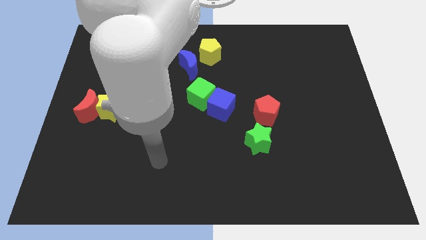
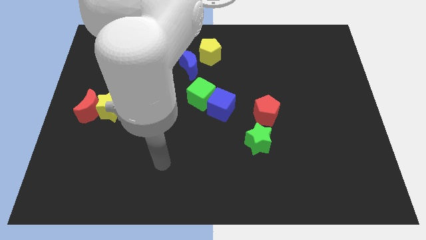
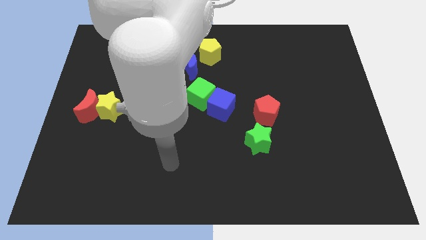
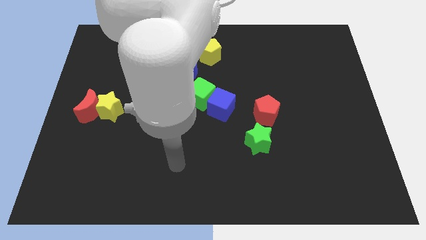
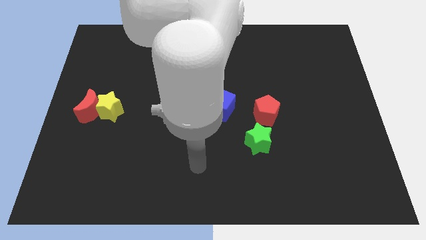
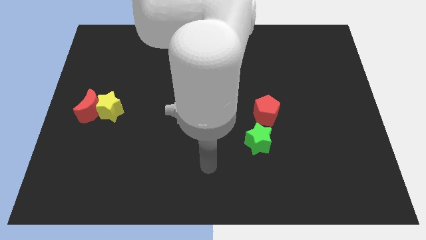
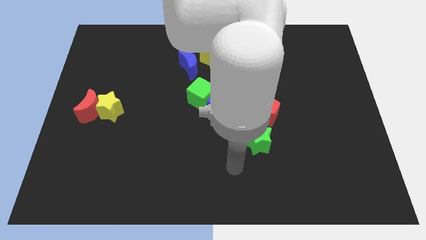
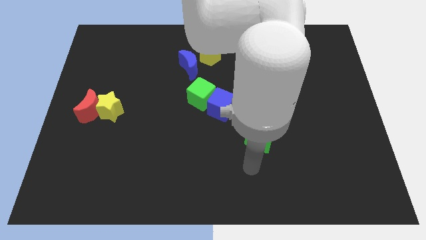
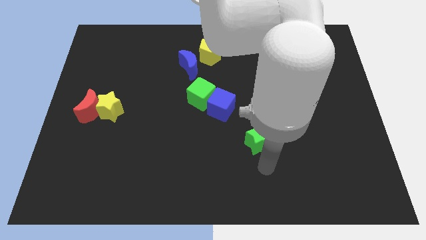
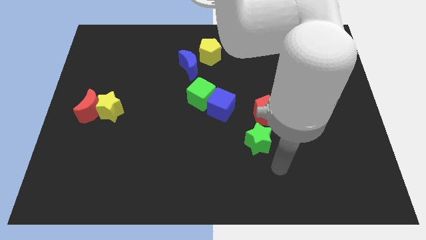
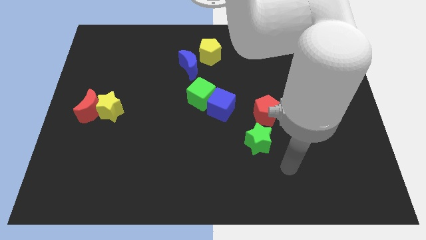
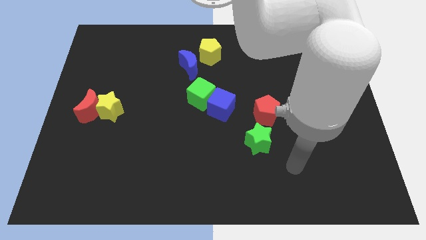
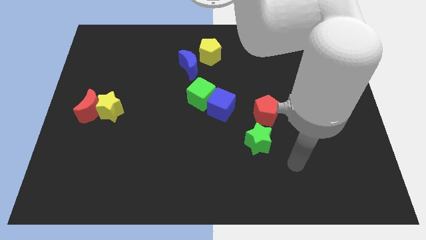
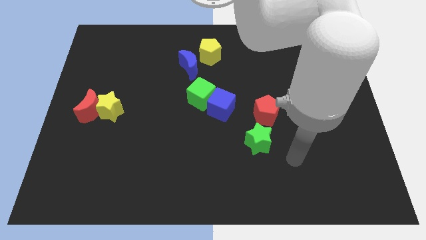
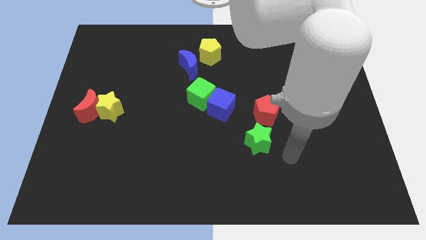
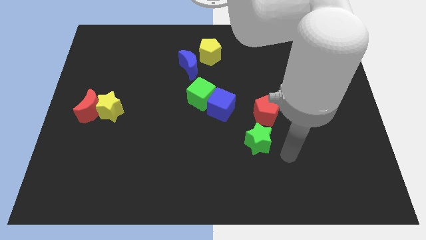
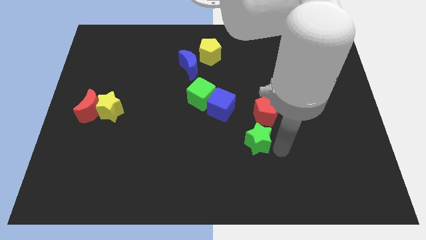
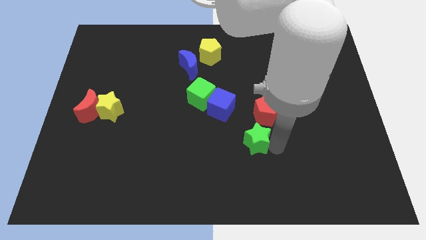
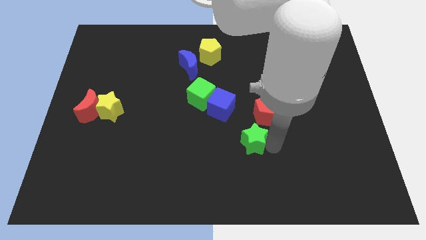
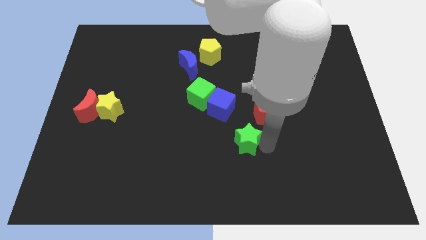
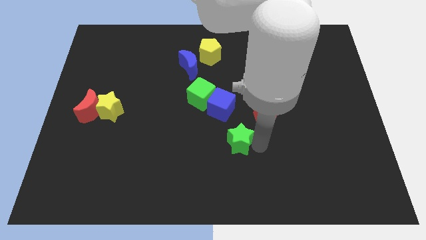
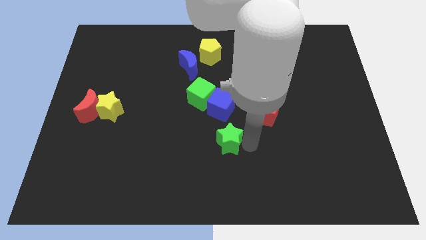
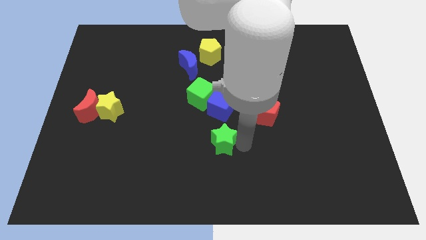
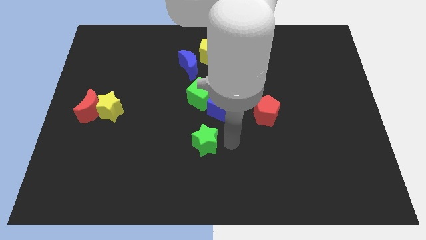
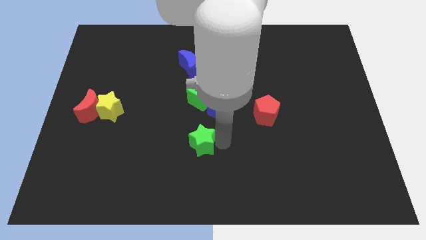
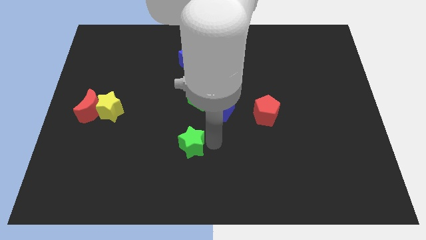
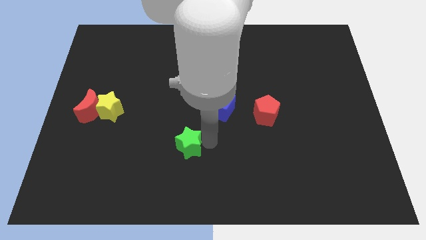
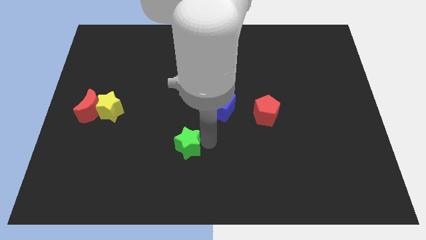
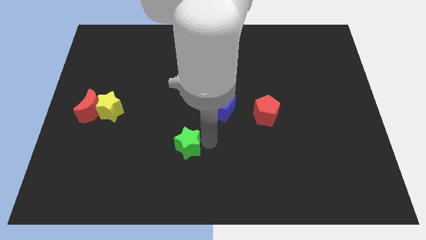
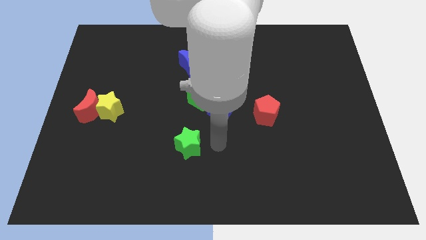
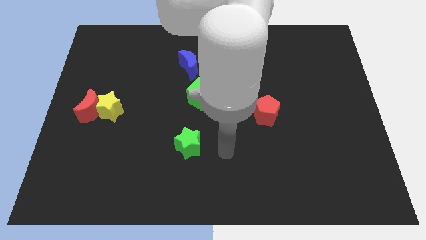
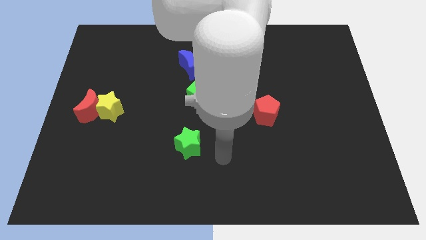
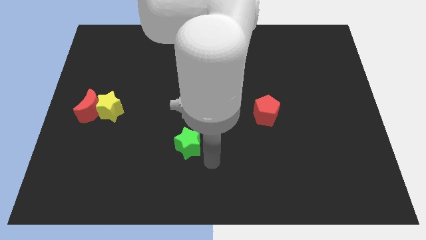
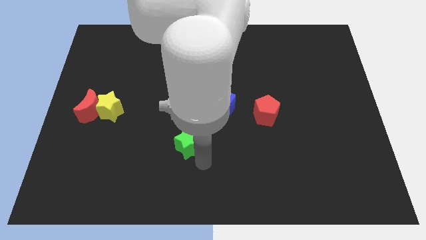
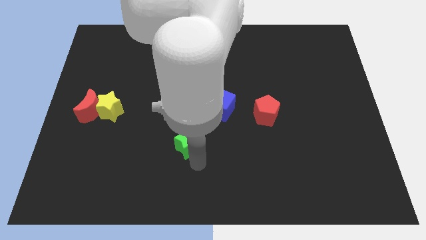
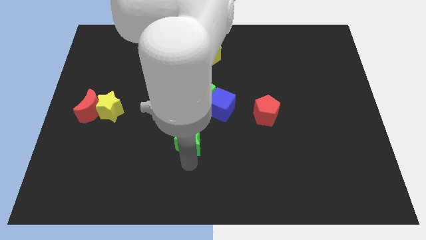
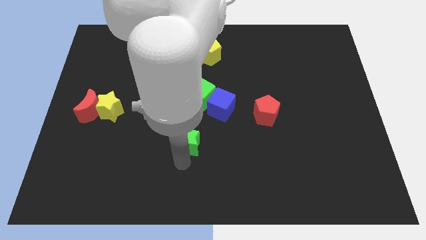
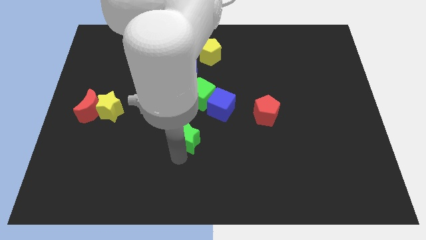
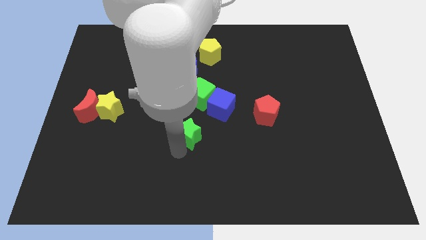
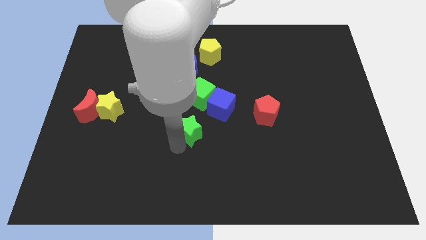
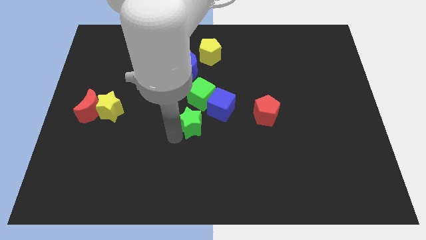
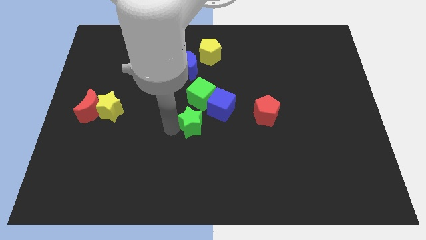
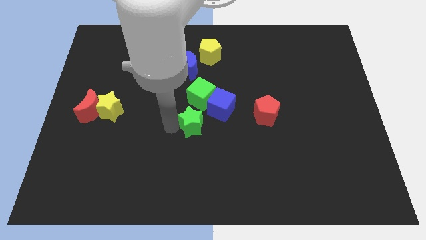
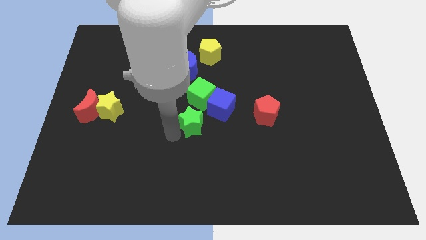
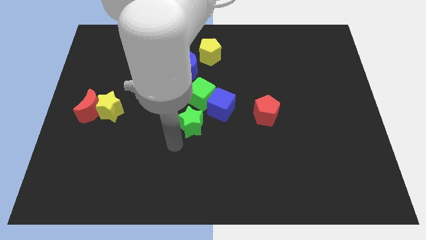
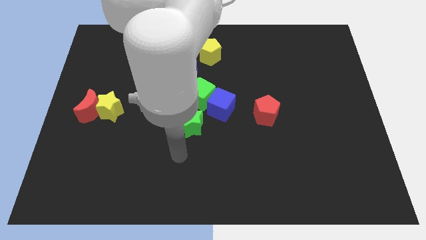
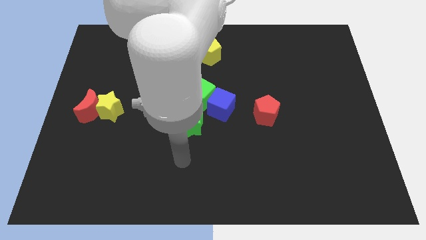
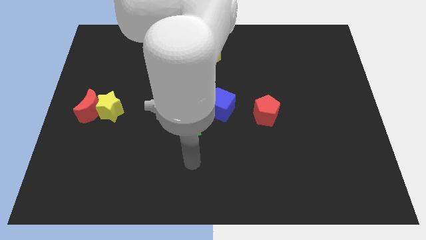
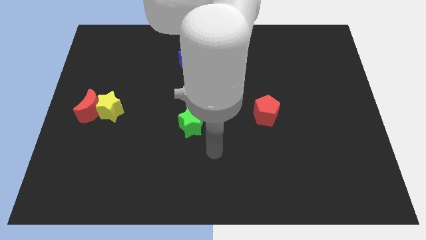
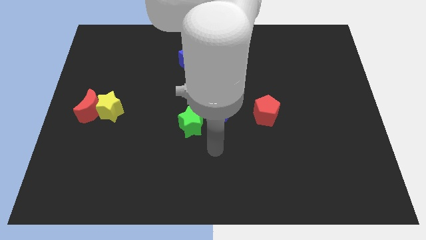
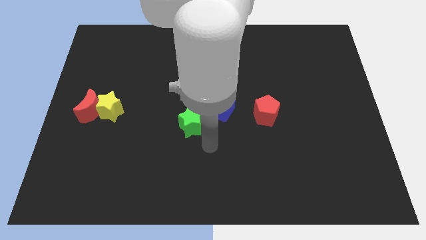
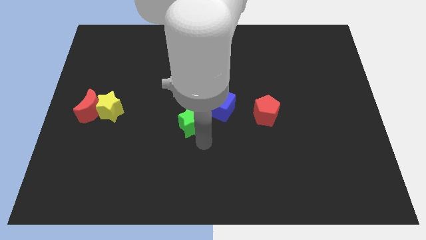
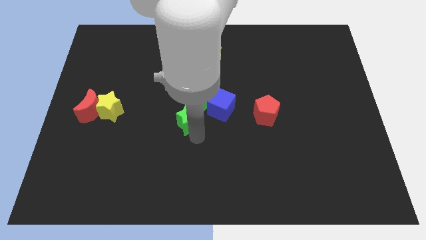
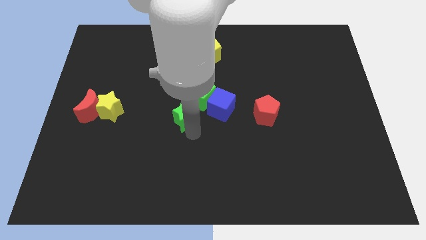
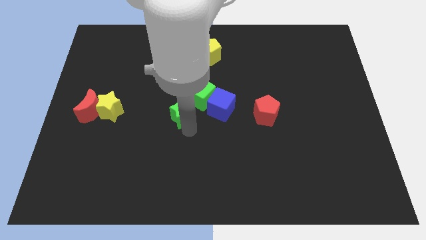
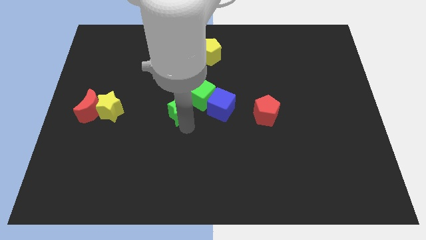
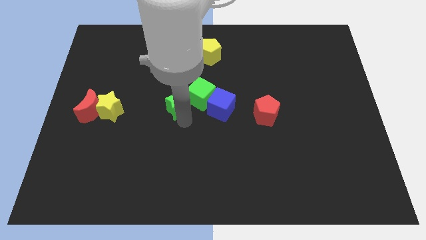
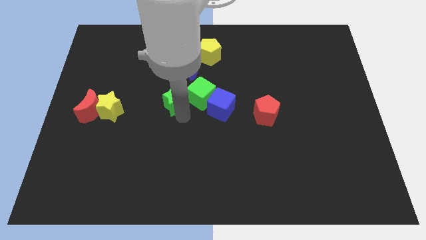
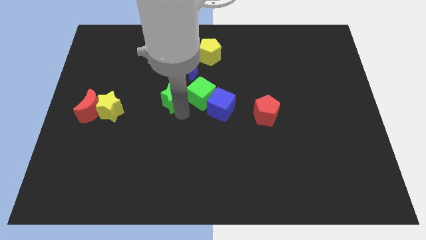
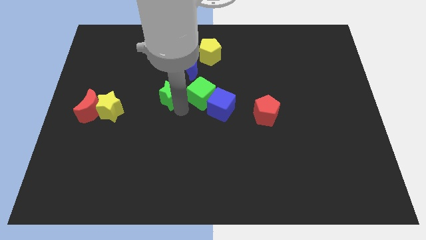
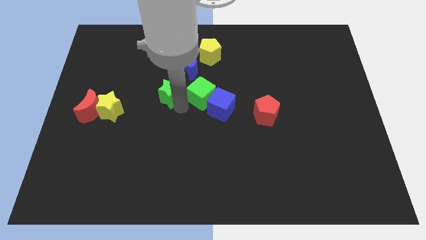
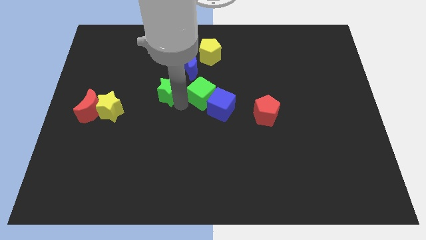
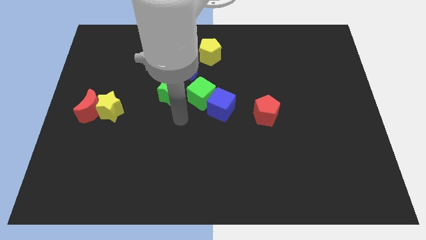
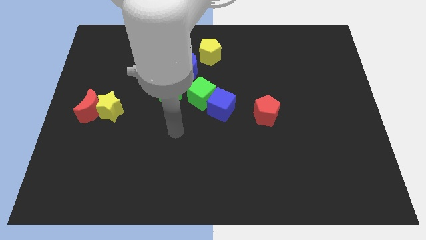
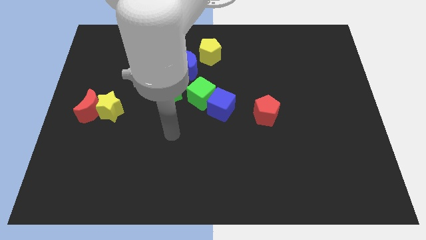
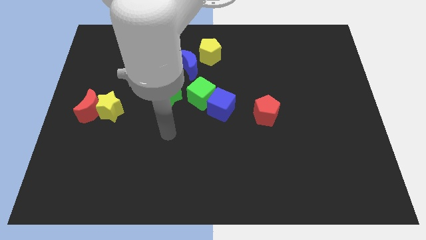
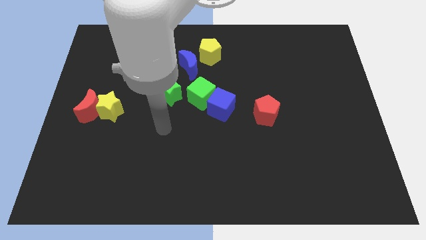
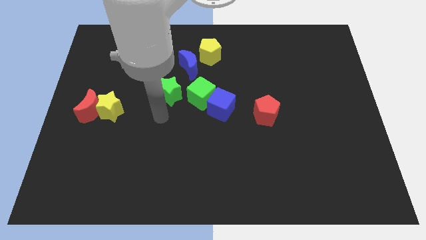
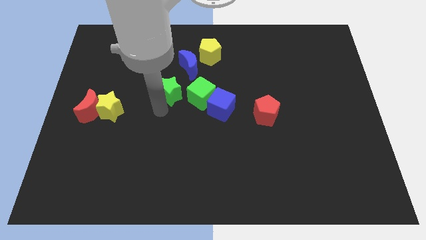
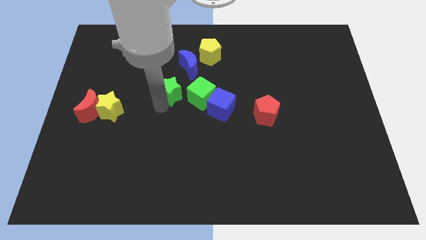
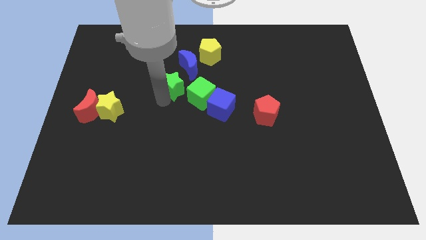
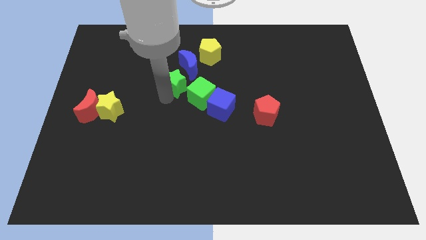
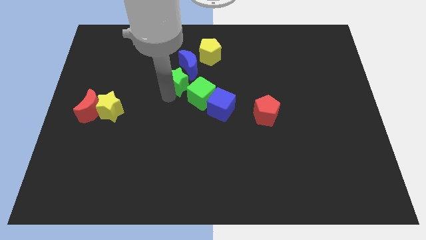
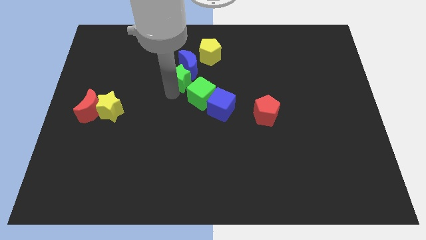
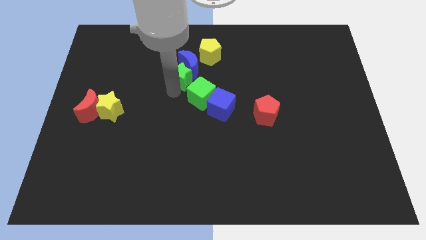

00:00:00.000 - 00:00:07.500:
push the green star towards the blue moon

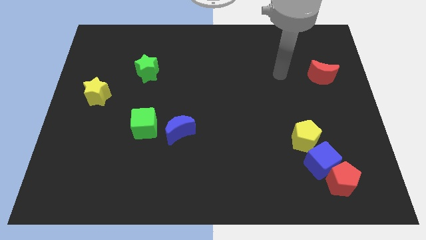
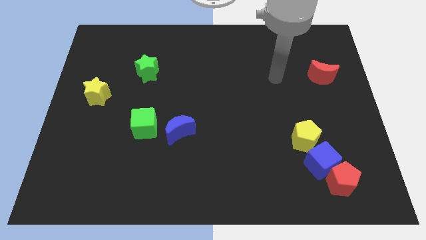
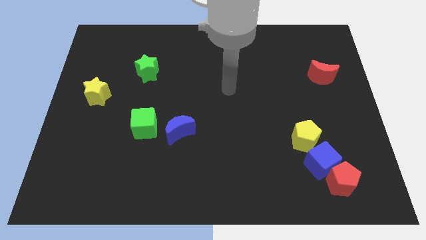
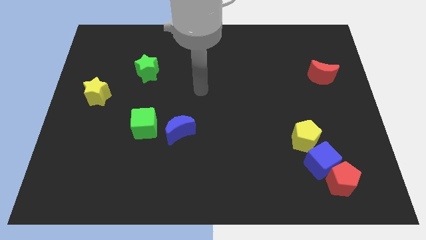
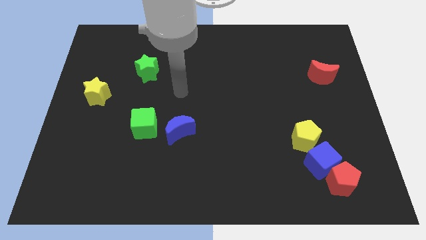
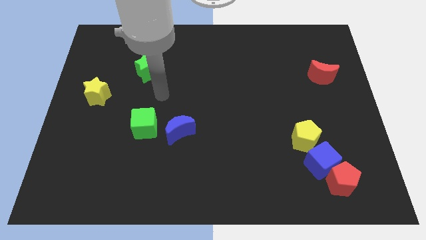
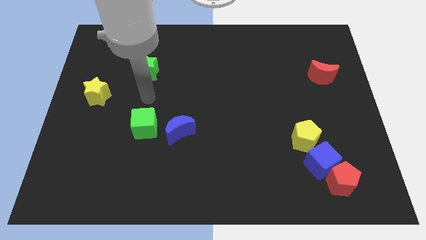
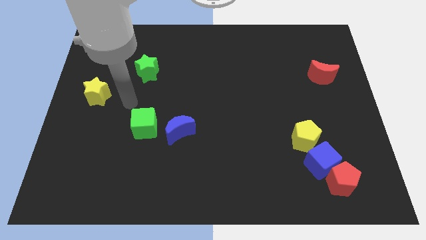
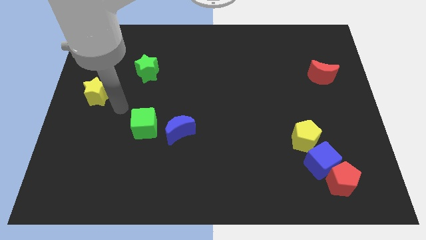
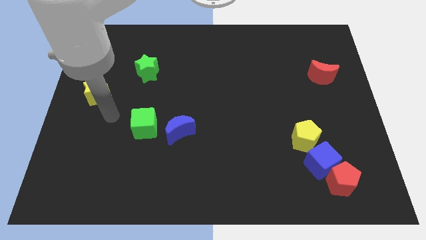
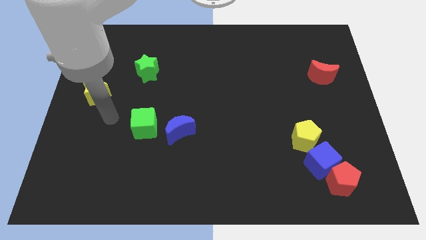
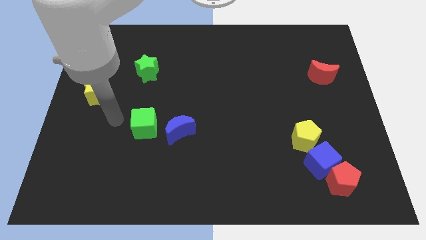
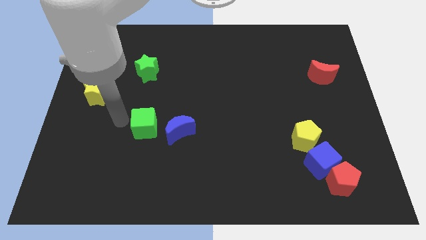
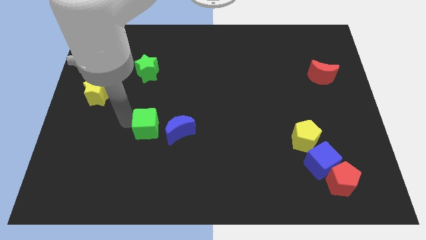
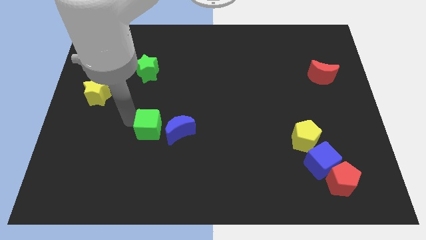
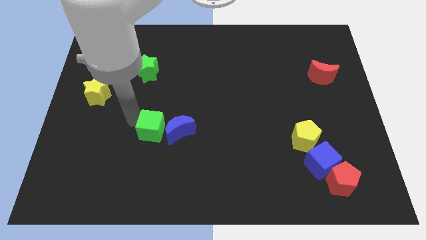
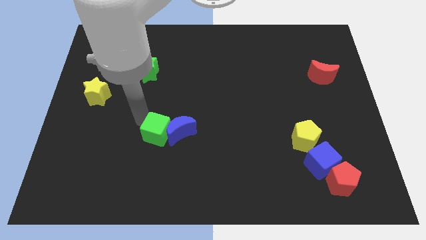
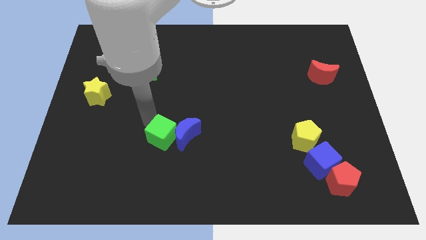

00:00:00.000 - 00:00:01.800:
move the green cube towards the blue moon
